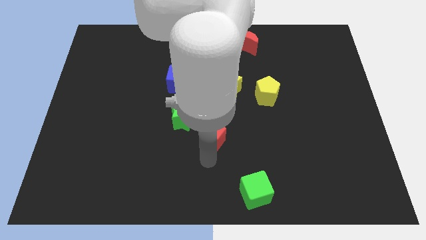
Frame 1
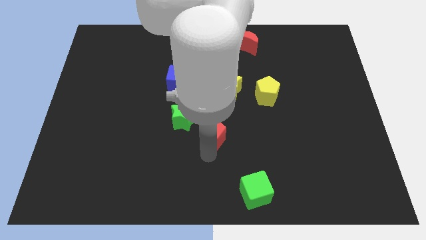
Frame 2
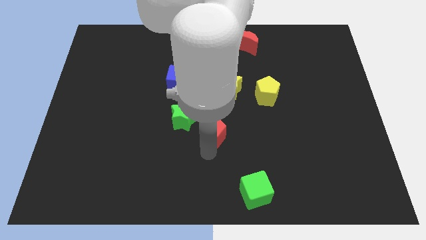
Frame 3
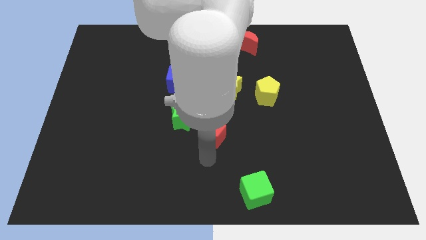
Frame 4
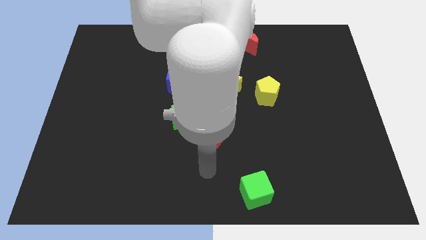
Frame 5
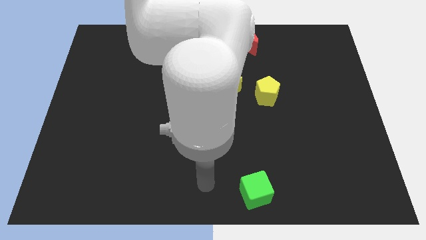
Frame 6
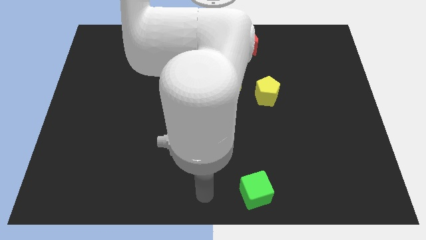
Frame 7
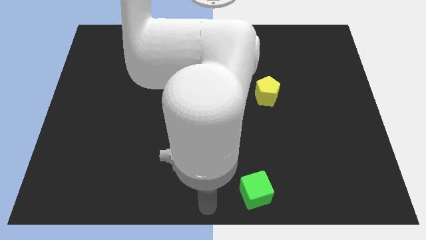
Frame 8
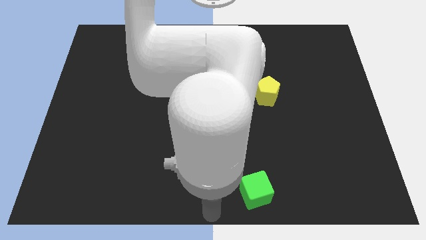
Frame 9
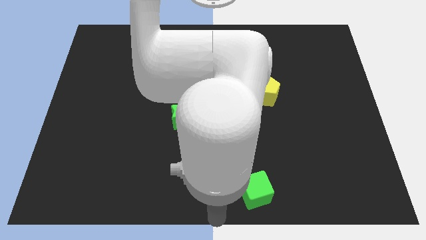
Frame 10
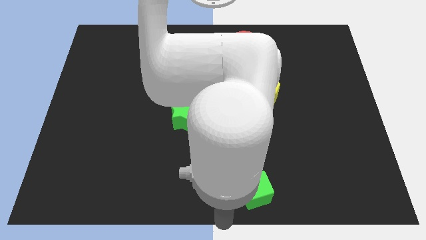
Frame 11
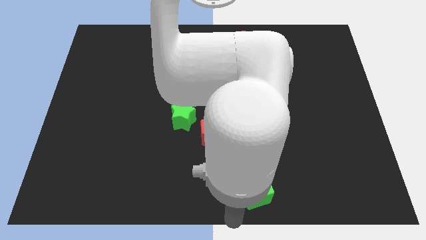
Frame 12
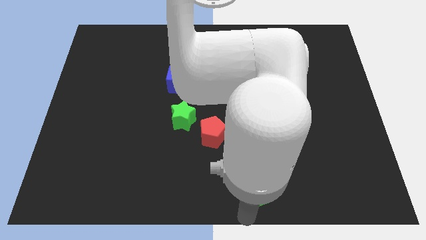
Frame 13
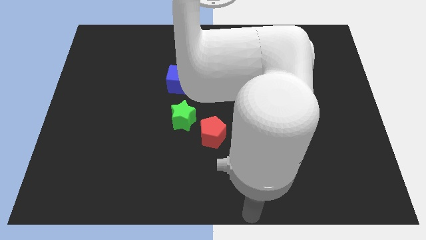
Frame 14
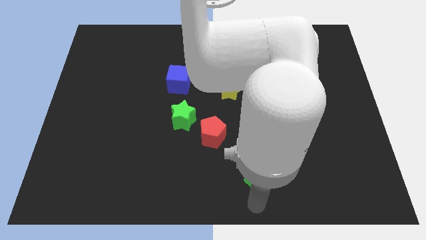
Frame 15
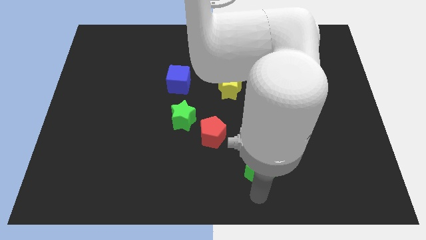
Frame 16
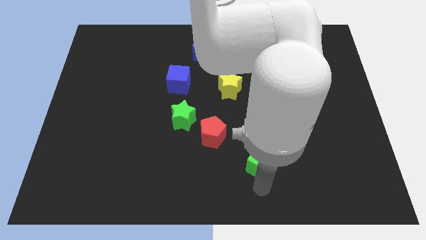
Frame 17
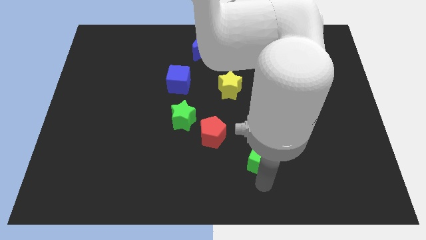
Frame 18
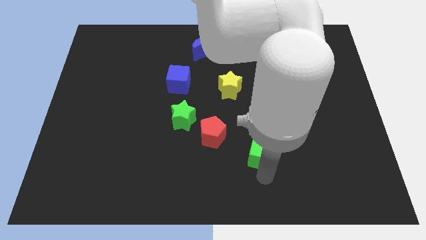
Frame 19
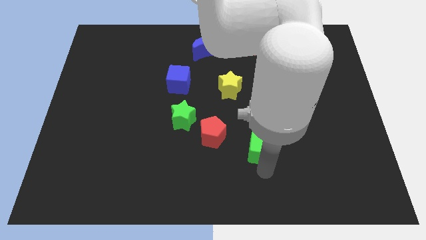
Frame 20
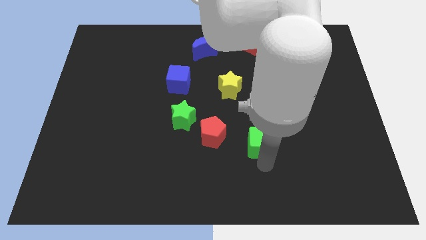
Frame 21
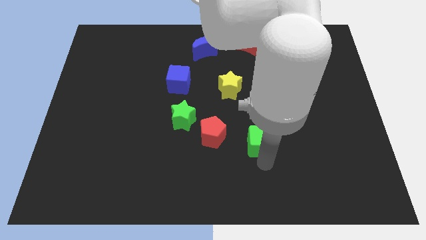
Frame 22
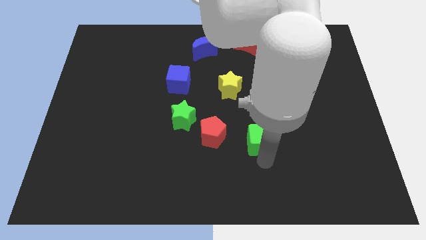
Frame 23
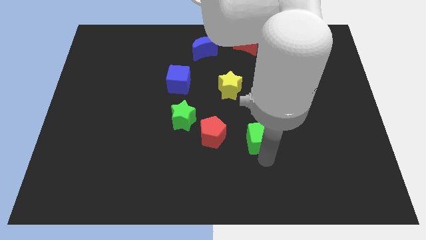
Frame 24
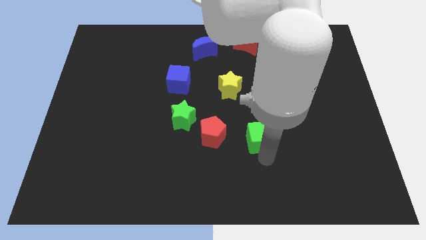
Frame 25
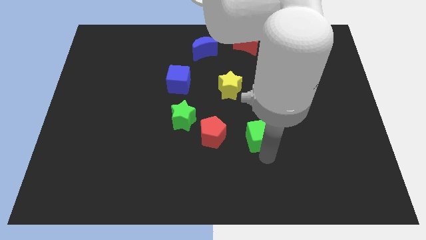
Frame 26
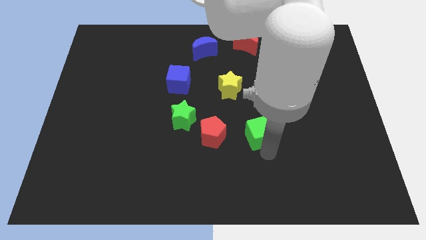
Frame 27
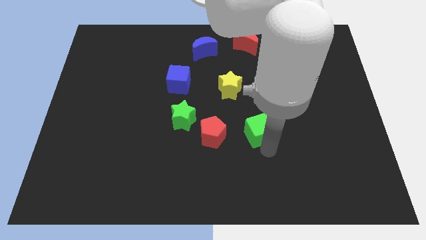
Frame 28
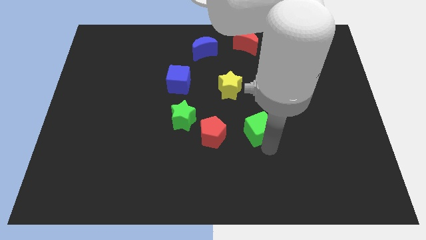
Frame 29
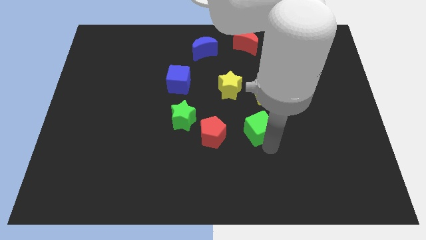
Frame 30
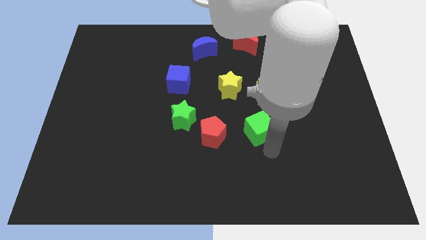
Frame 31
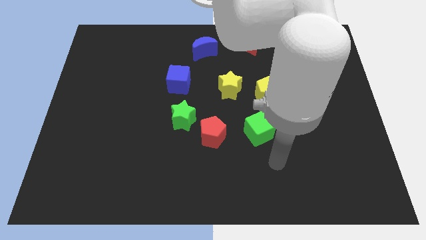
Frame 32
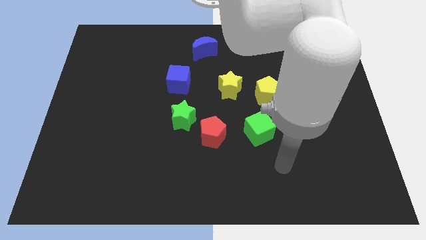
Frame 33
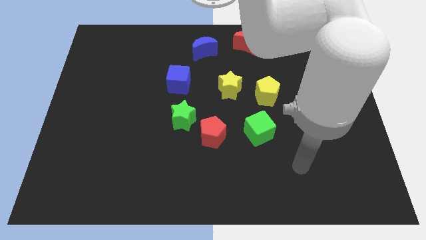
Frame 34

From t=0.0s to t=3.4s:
place the green cube right to the red pentagon

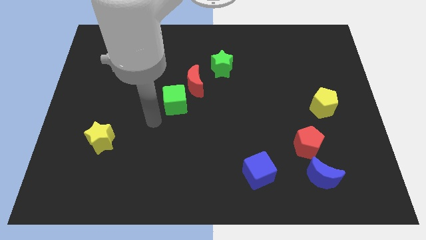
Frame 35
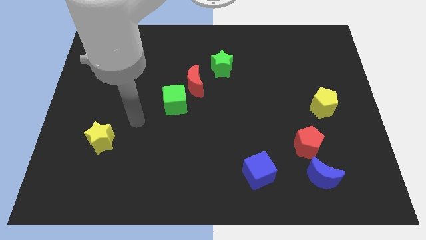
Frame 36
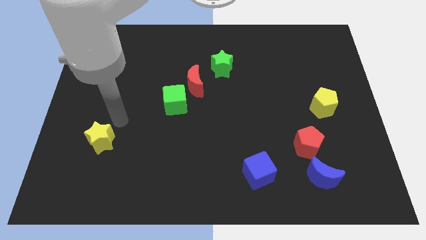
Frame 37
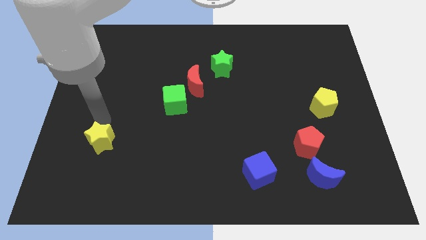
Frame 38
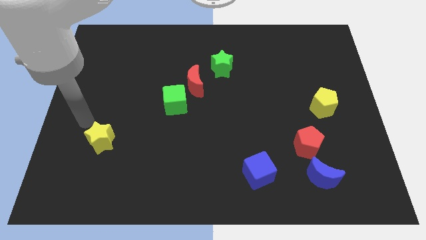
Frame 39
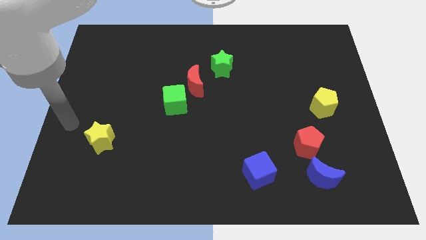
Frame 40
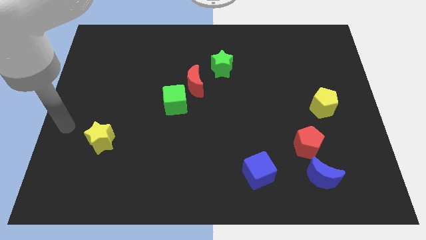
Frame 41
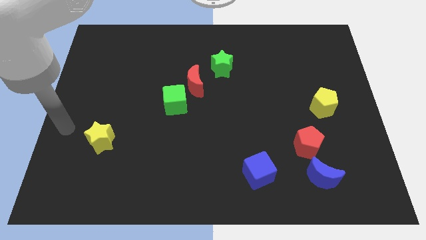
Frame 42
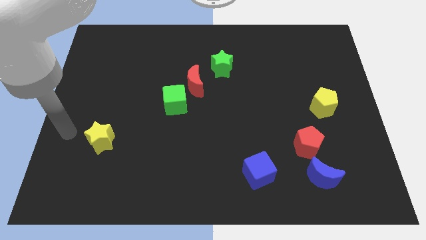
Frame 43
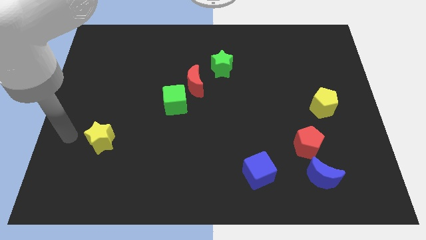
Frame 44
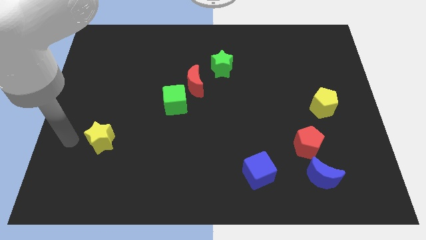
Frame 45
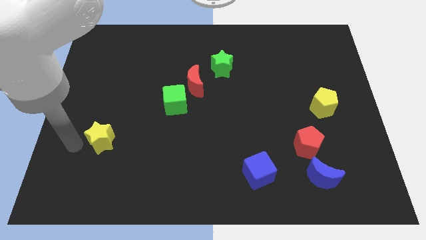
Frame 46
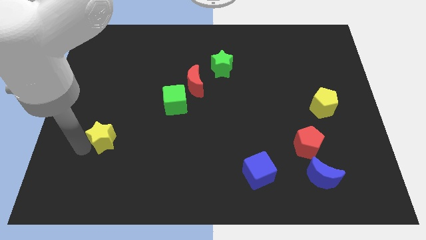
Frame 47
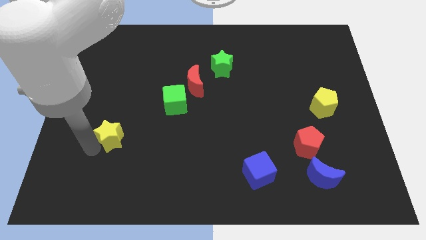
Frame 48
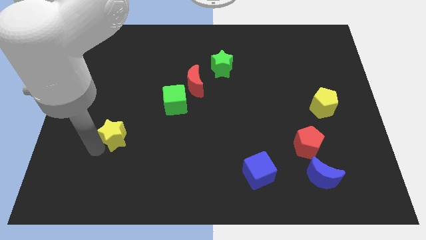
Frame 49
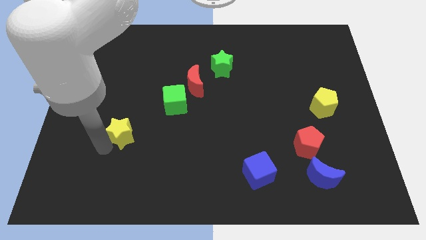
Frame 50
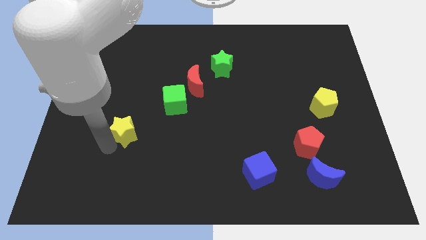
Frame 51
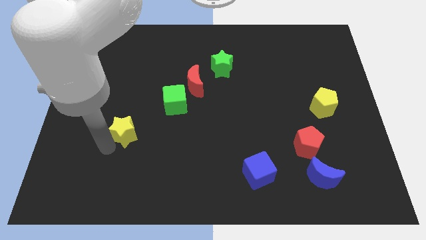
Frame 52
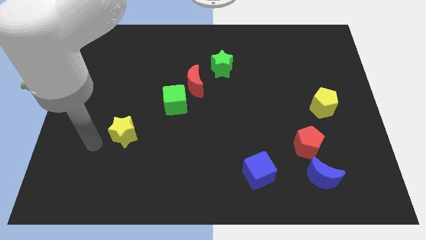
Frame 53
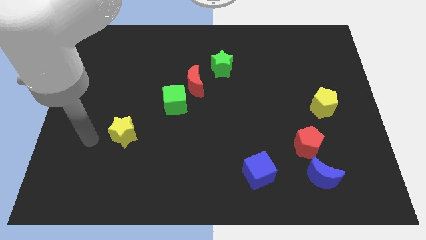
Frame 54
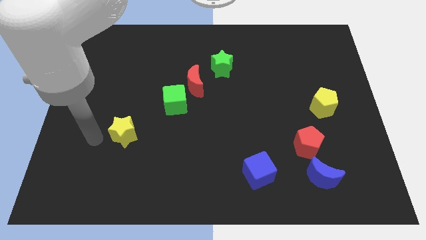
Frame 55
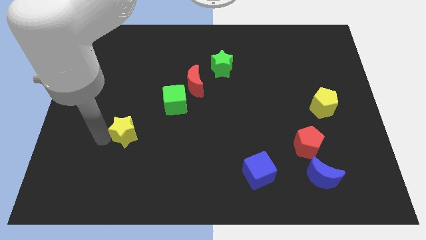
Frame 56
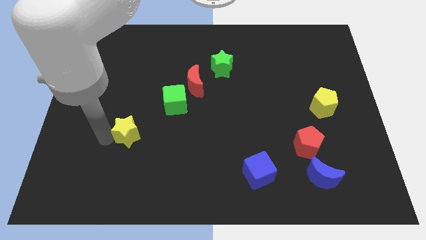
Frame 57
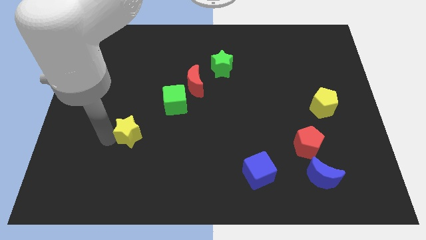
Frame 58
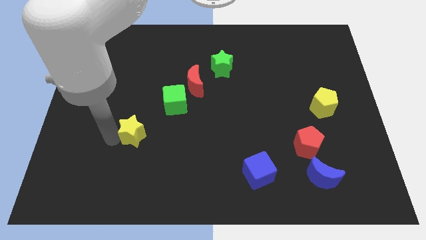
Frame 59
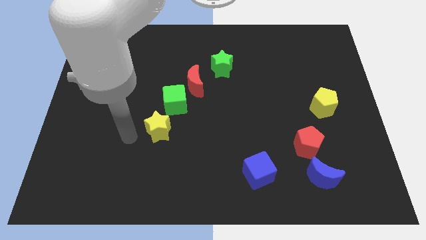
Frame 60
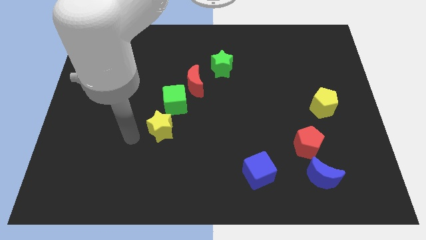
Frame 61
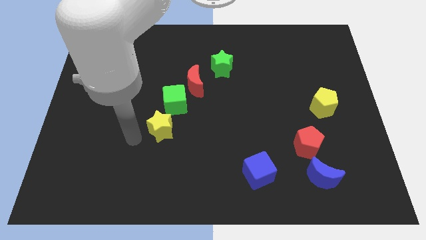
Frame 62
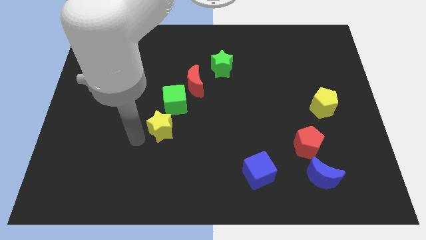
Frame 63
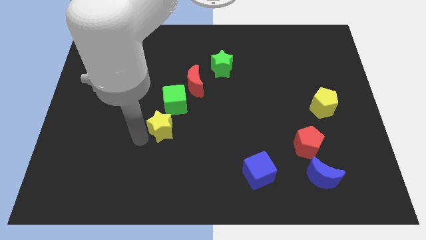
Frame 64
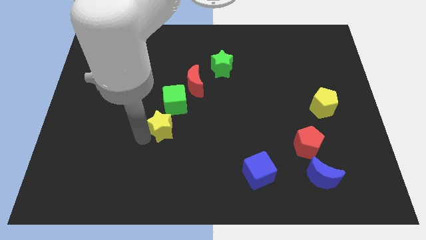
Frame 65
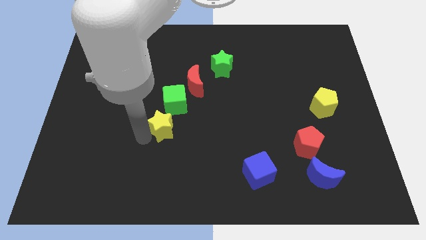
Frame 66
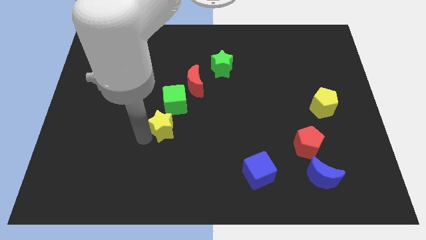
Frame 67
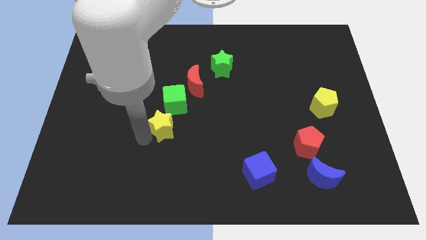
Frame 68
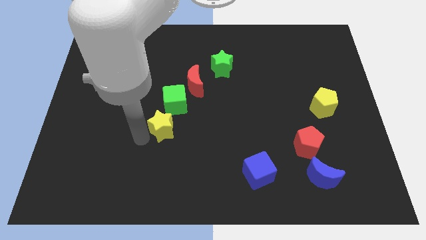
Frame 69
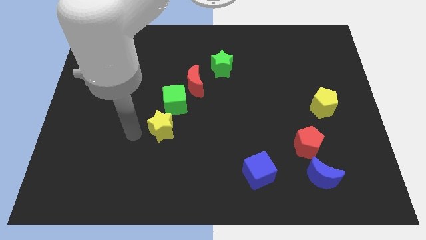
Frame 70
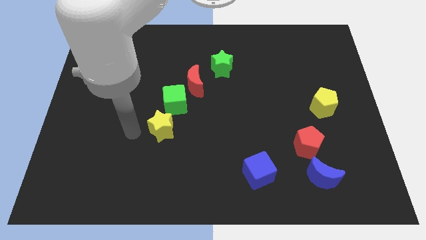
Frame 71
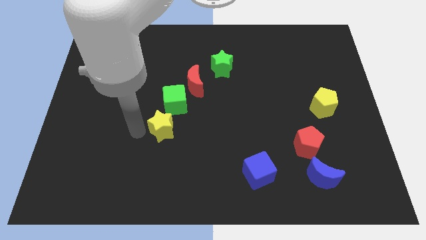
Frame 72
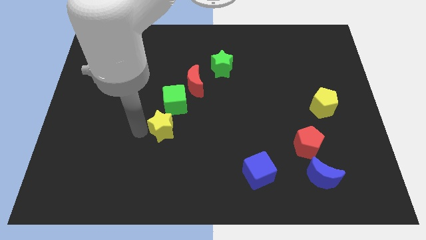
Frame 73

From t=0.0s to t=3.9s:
place the yellow star below the green cube

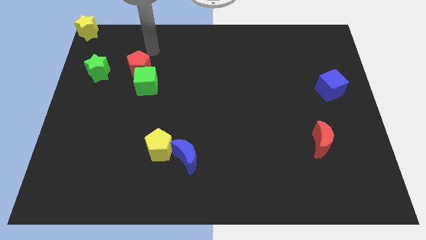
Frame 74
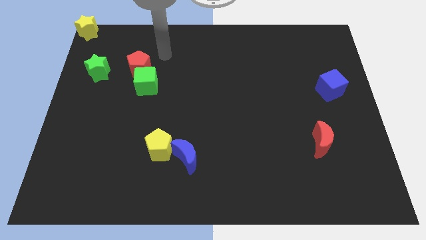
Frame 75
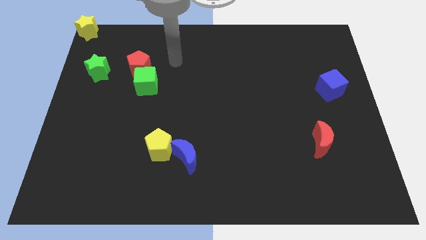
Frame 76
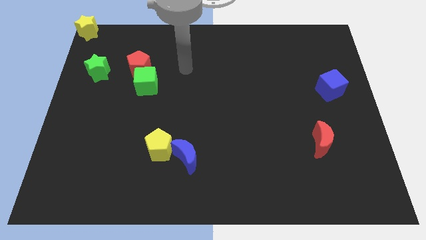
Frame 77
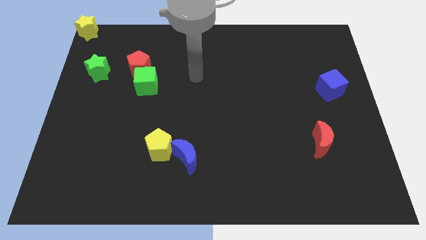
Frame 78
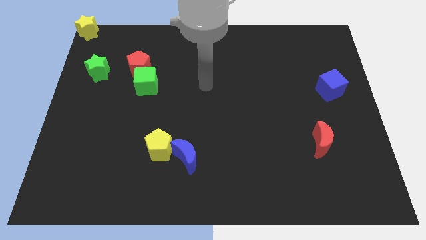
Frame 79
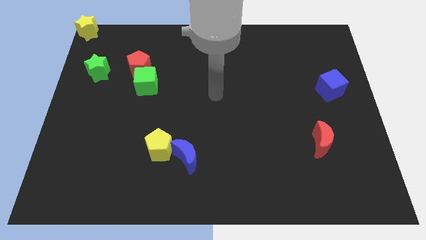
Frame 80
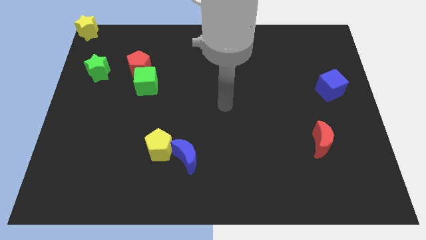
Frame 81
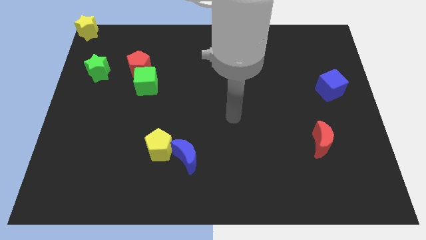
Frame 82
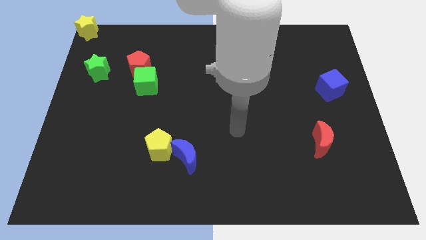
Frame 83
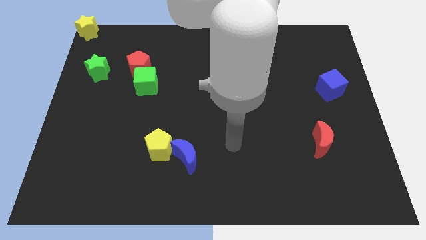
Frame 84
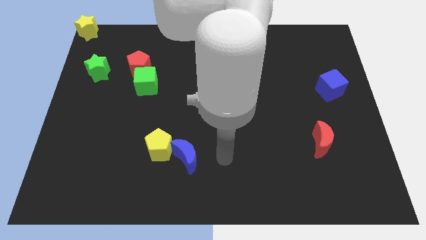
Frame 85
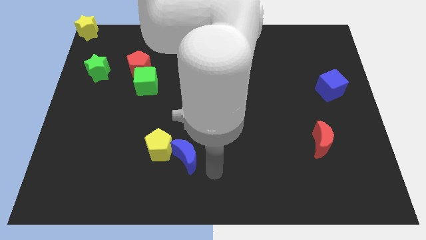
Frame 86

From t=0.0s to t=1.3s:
move arm to the blue moon

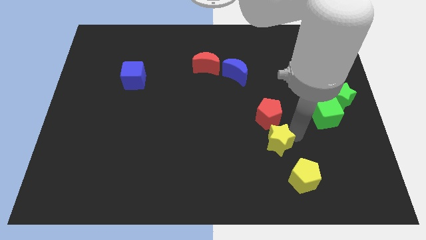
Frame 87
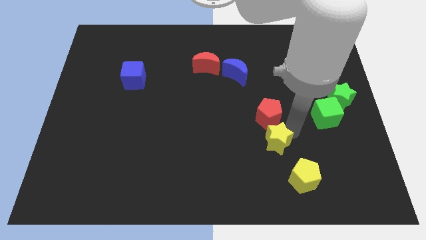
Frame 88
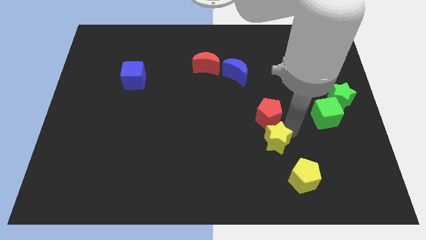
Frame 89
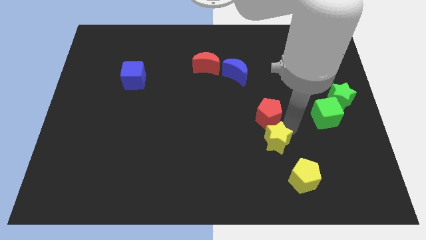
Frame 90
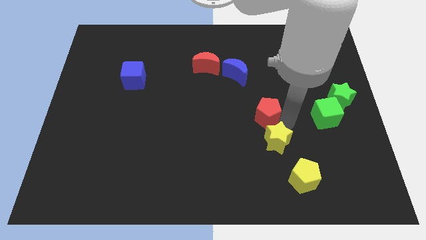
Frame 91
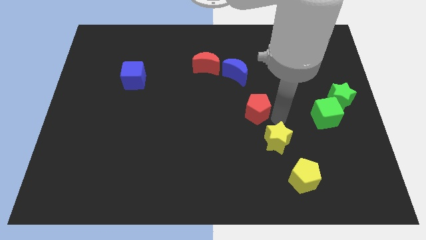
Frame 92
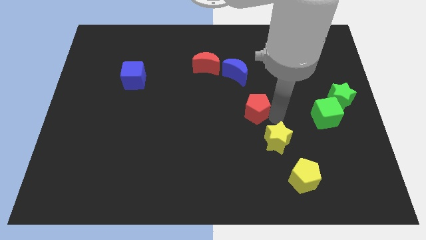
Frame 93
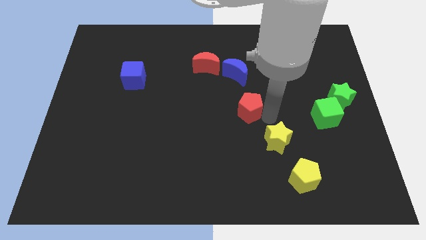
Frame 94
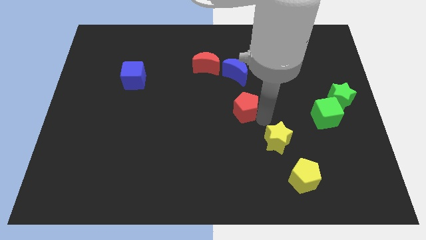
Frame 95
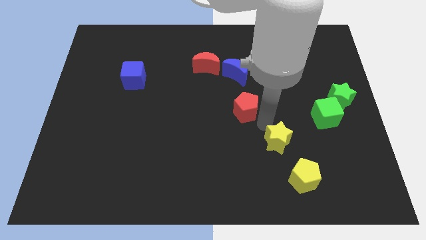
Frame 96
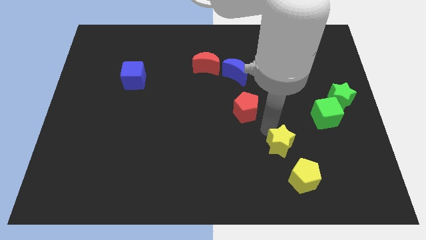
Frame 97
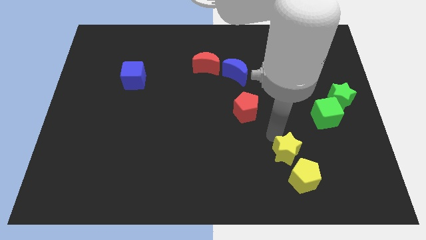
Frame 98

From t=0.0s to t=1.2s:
push the red pentagon slightly to the left
